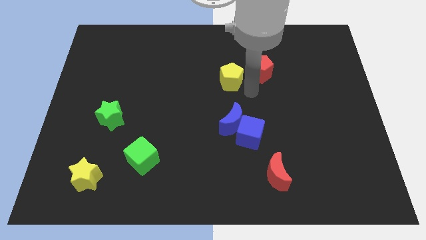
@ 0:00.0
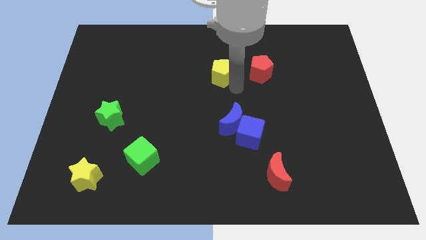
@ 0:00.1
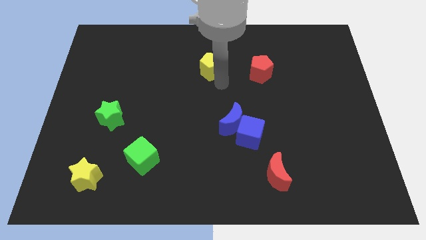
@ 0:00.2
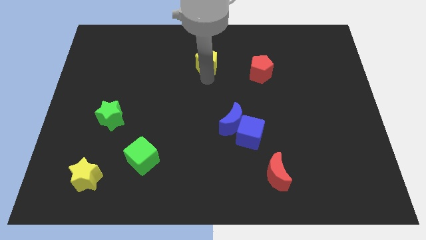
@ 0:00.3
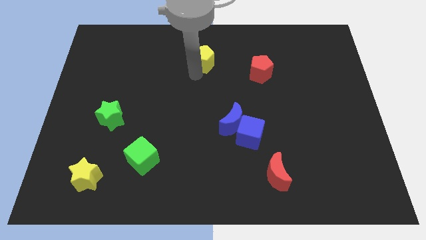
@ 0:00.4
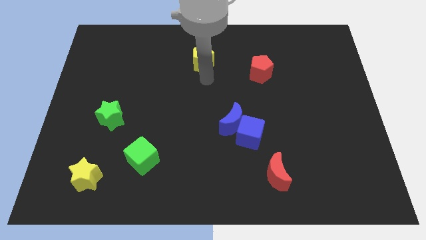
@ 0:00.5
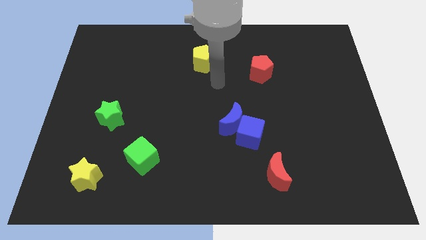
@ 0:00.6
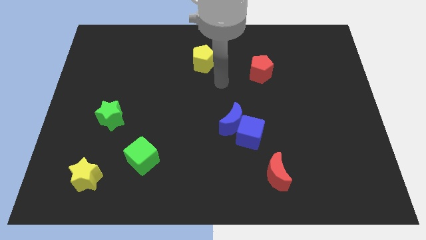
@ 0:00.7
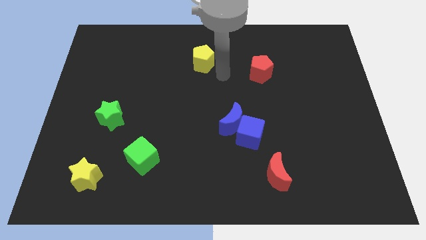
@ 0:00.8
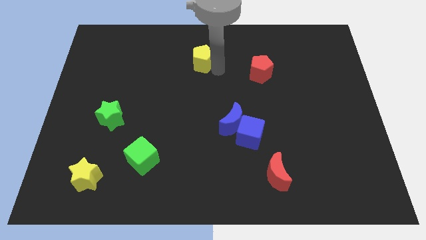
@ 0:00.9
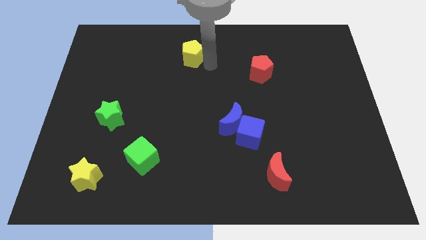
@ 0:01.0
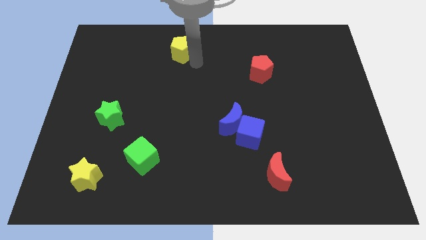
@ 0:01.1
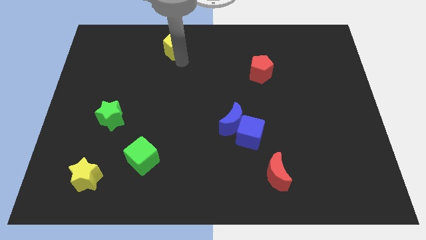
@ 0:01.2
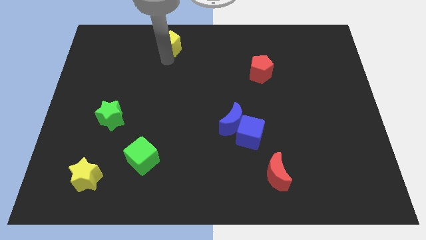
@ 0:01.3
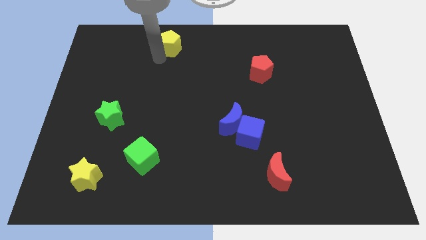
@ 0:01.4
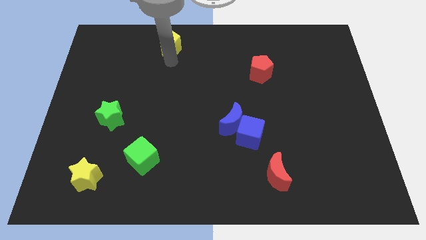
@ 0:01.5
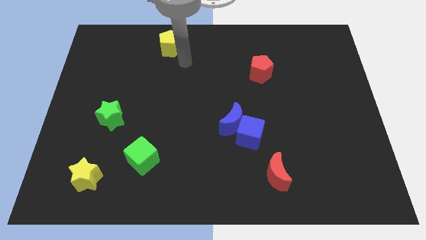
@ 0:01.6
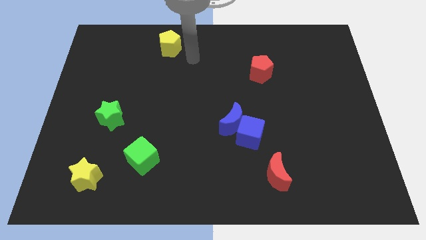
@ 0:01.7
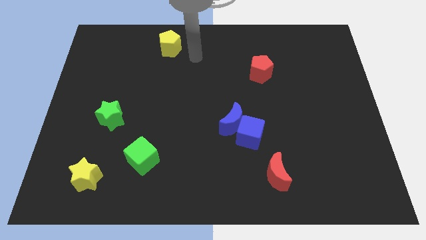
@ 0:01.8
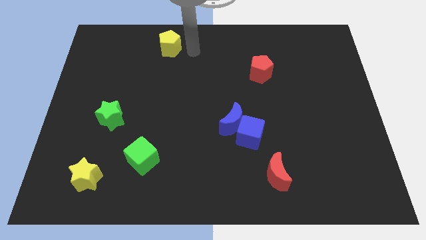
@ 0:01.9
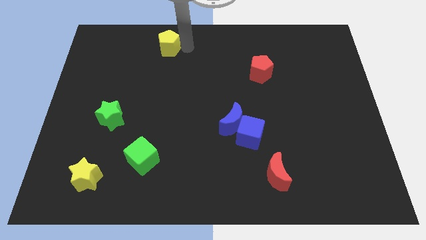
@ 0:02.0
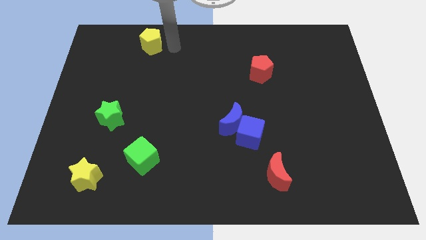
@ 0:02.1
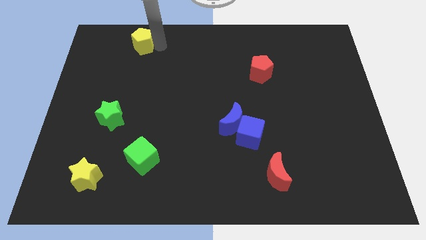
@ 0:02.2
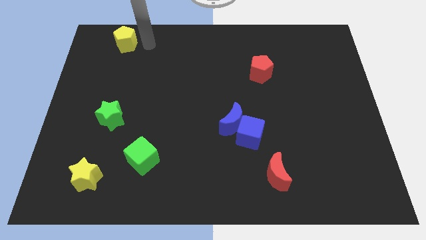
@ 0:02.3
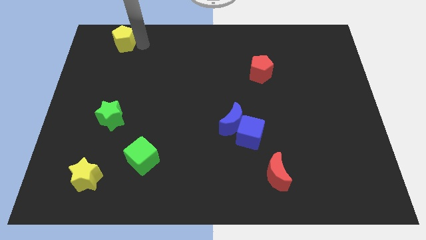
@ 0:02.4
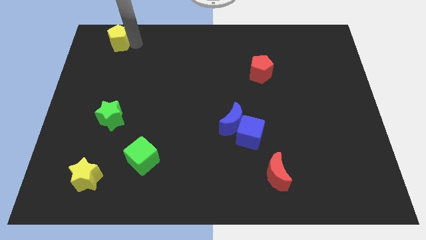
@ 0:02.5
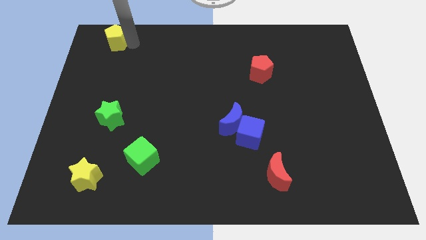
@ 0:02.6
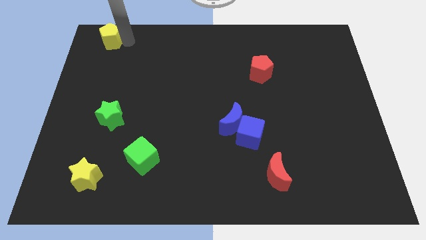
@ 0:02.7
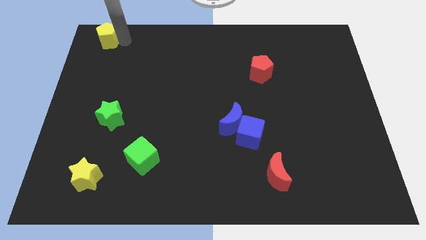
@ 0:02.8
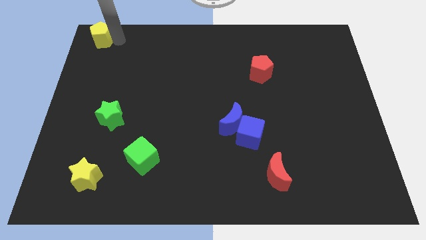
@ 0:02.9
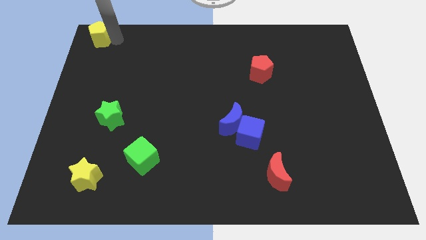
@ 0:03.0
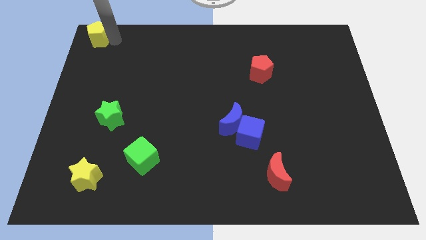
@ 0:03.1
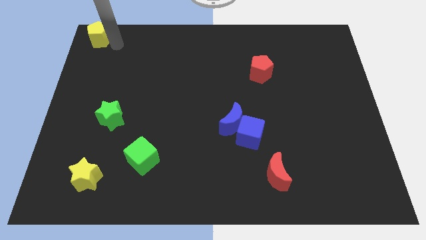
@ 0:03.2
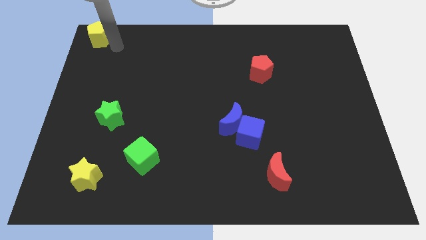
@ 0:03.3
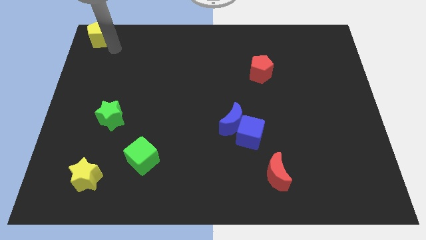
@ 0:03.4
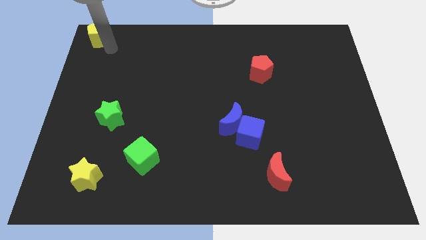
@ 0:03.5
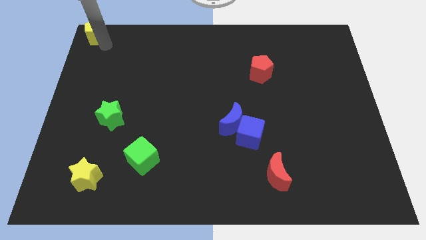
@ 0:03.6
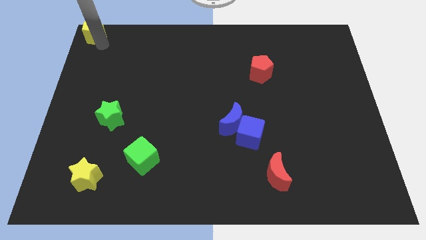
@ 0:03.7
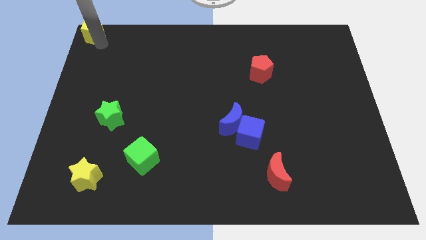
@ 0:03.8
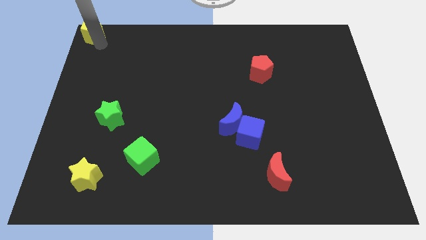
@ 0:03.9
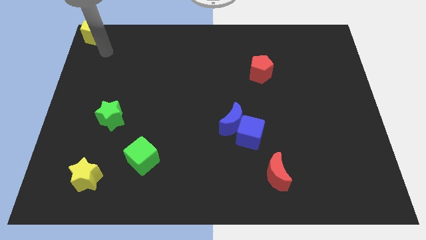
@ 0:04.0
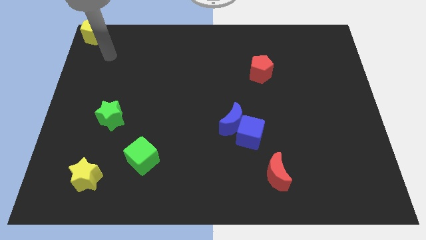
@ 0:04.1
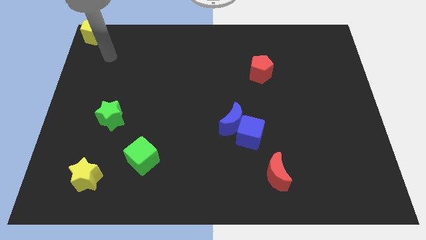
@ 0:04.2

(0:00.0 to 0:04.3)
drag the yellow pentagon towards the top left corner of the board

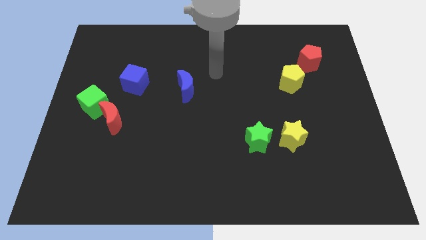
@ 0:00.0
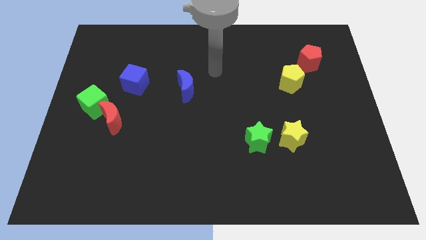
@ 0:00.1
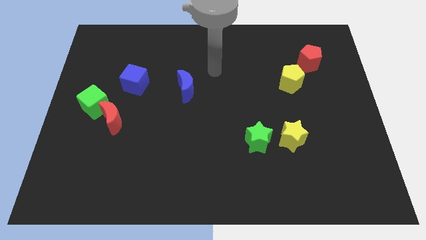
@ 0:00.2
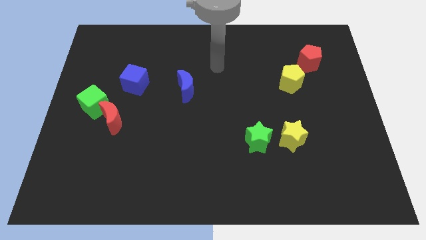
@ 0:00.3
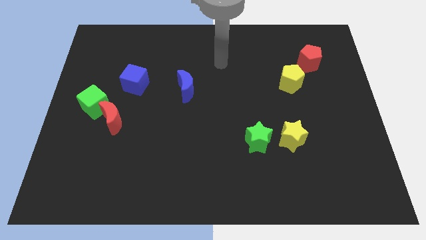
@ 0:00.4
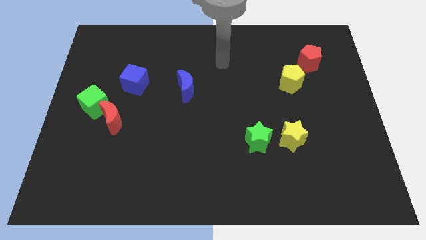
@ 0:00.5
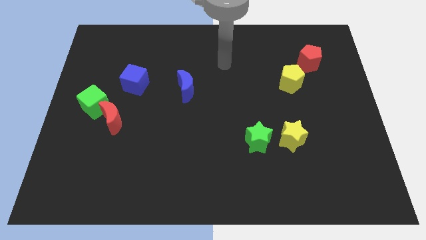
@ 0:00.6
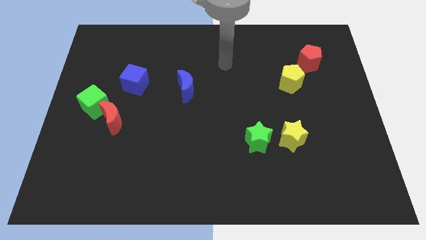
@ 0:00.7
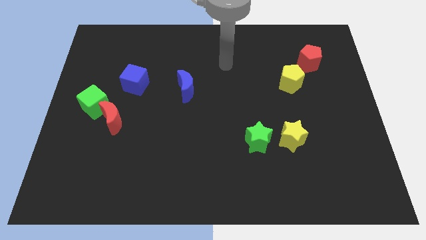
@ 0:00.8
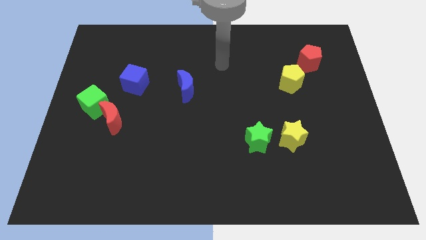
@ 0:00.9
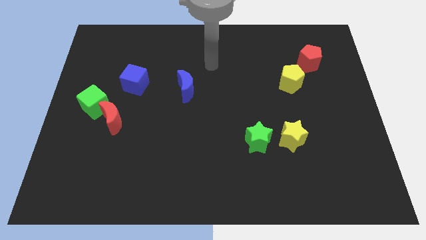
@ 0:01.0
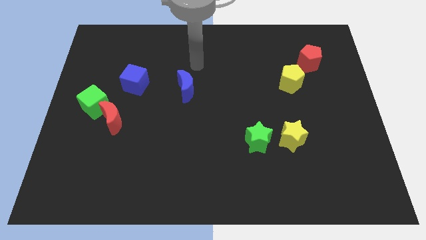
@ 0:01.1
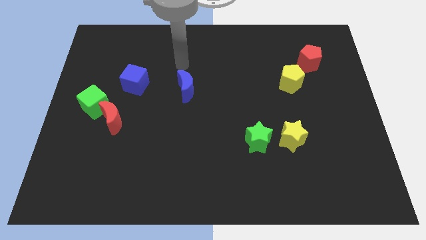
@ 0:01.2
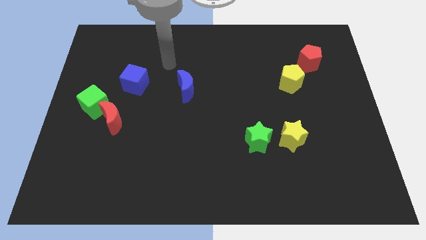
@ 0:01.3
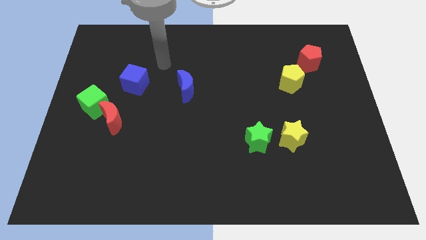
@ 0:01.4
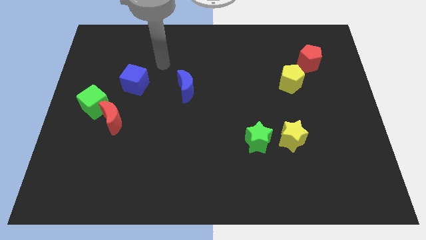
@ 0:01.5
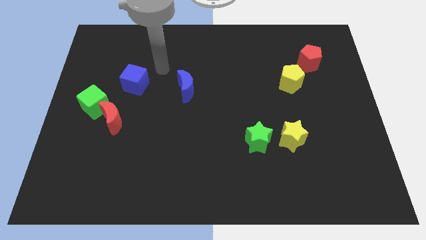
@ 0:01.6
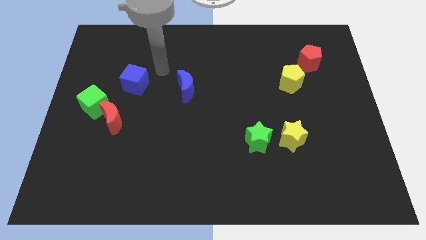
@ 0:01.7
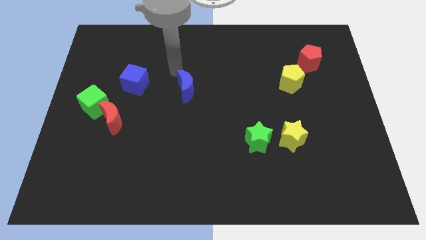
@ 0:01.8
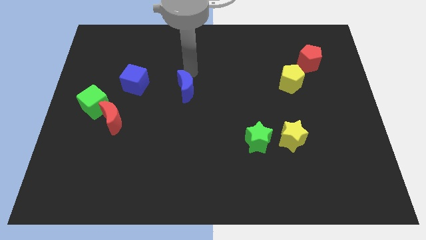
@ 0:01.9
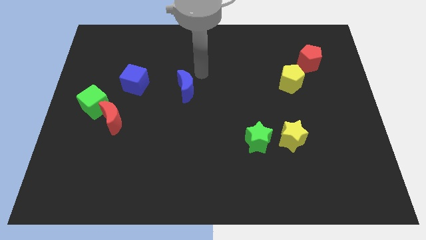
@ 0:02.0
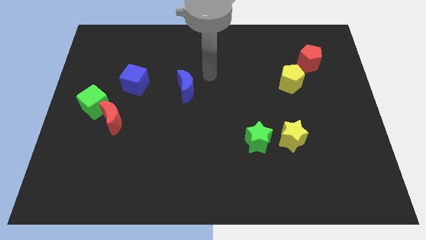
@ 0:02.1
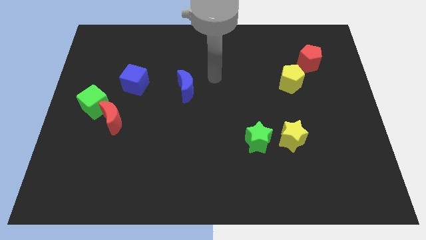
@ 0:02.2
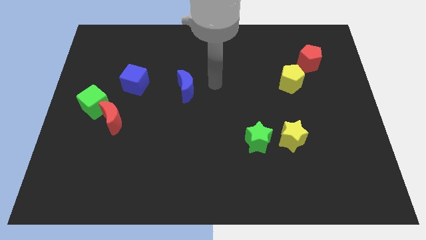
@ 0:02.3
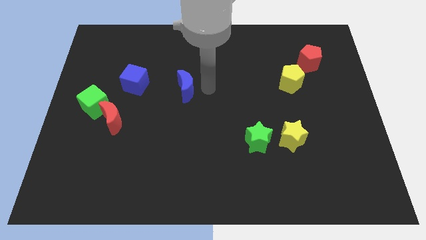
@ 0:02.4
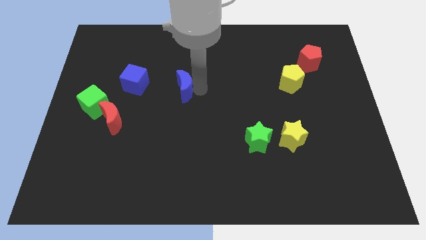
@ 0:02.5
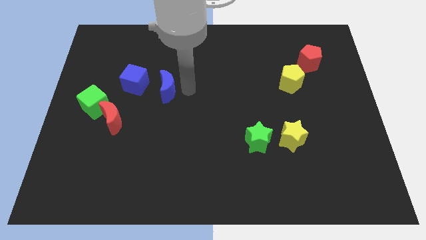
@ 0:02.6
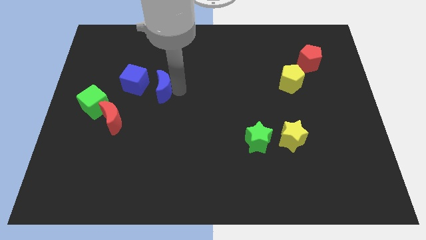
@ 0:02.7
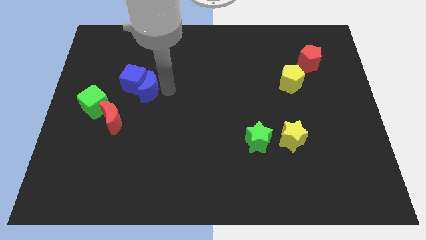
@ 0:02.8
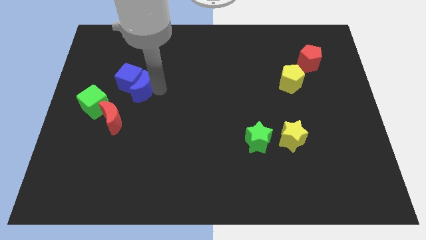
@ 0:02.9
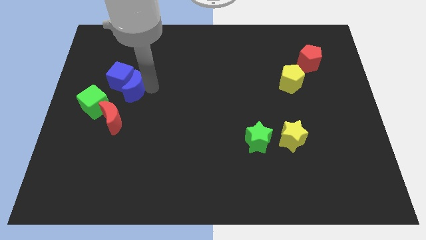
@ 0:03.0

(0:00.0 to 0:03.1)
move blue crescent into the blue cube

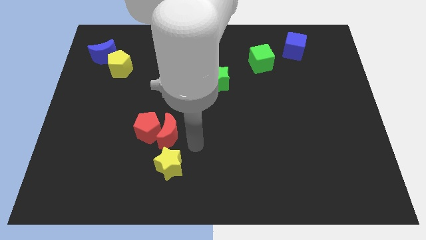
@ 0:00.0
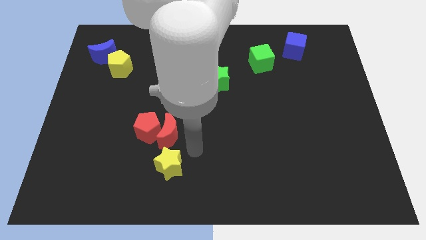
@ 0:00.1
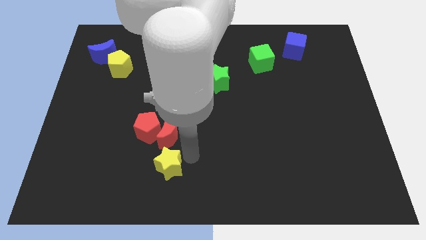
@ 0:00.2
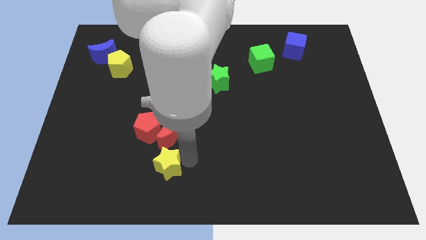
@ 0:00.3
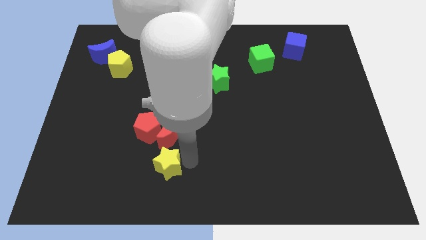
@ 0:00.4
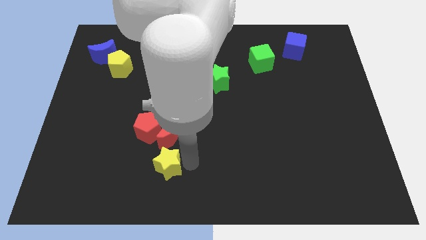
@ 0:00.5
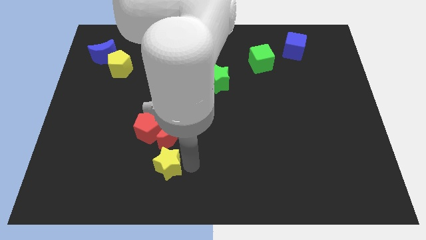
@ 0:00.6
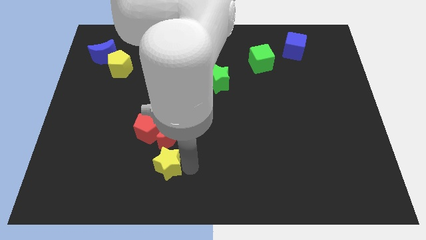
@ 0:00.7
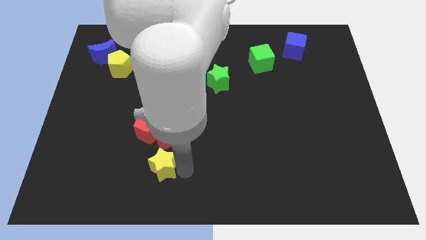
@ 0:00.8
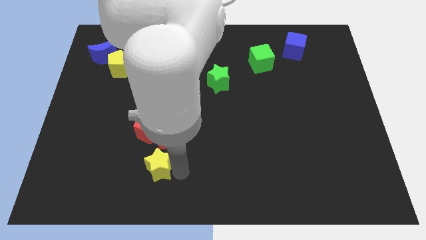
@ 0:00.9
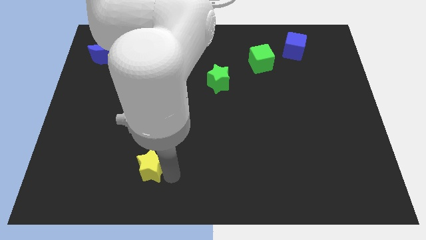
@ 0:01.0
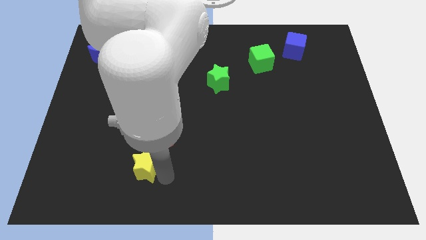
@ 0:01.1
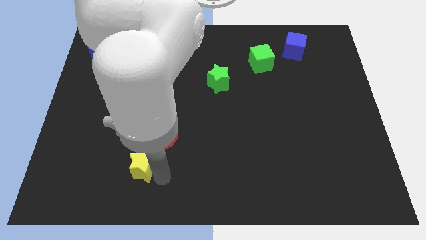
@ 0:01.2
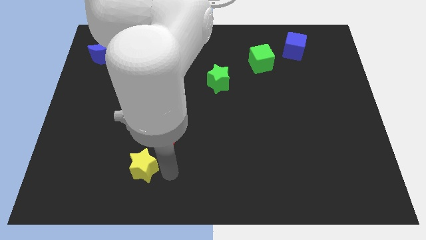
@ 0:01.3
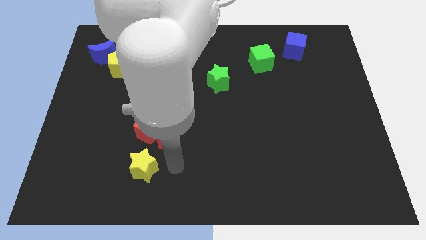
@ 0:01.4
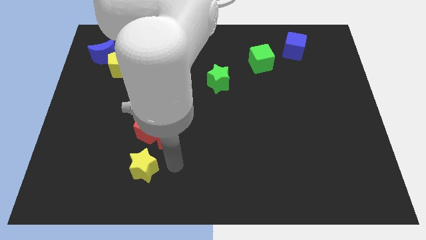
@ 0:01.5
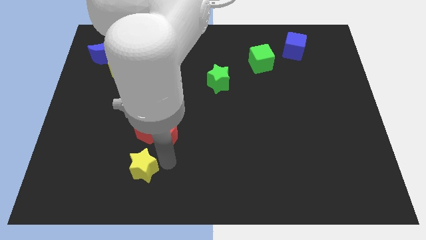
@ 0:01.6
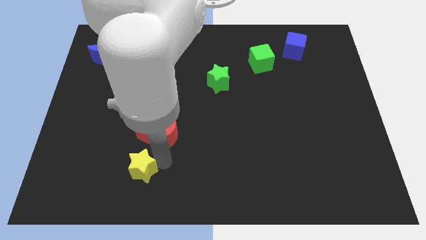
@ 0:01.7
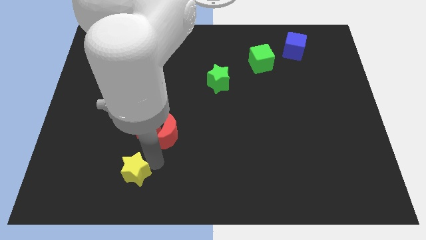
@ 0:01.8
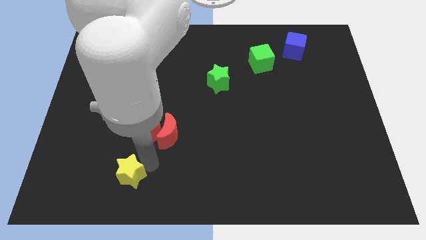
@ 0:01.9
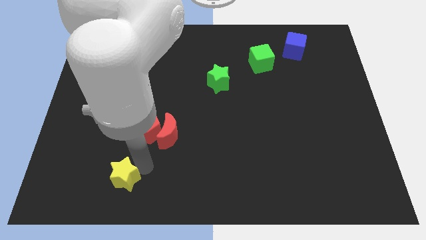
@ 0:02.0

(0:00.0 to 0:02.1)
separate yellow star from red moon
